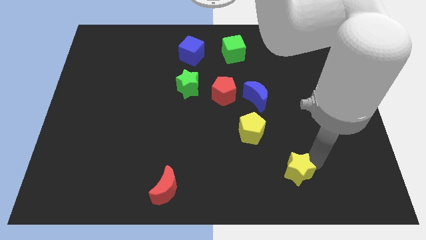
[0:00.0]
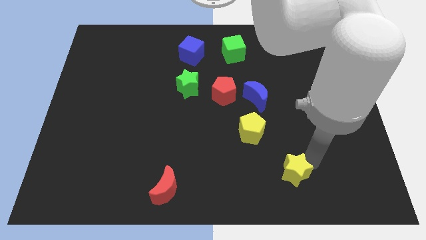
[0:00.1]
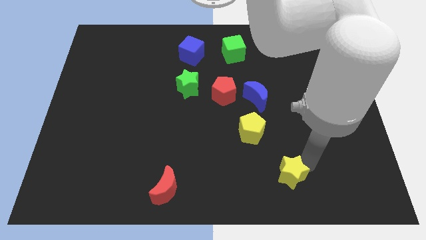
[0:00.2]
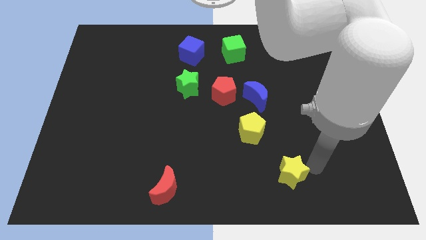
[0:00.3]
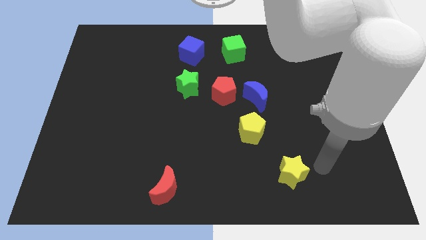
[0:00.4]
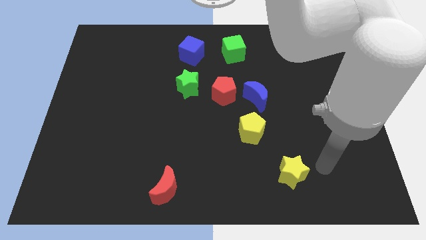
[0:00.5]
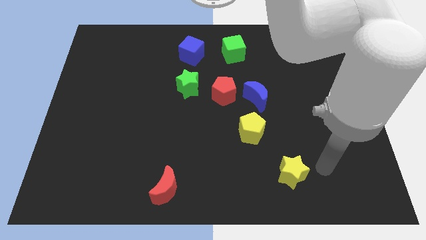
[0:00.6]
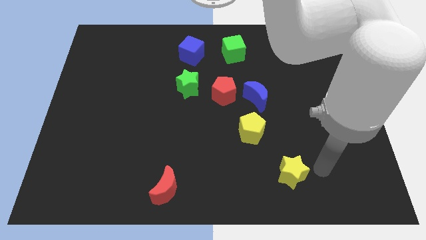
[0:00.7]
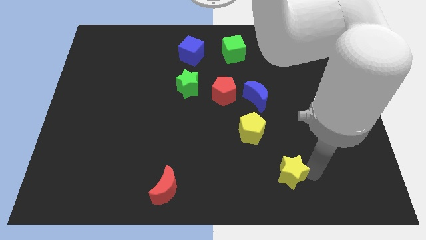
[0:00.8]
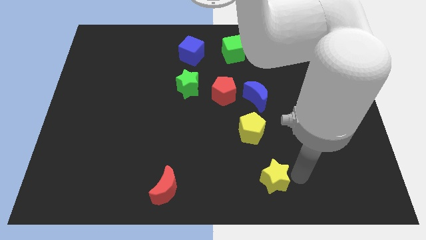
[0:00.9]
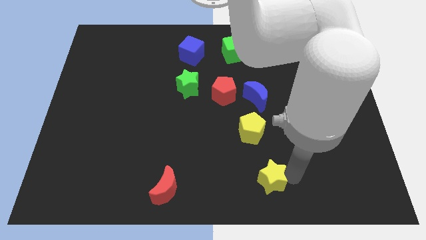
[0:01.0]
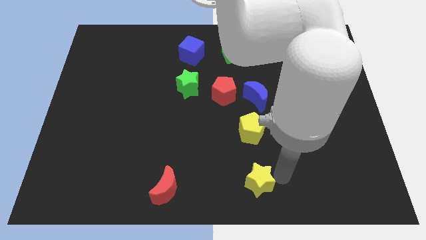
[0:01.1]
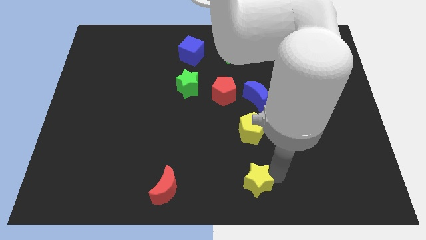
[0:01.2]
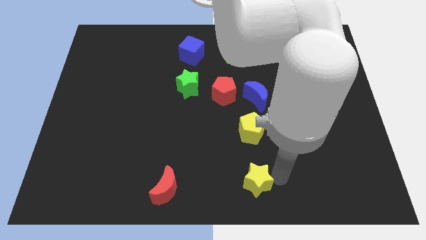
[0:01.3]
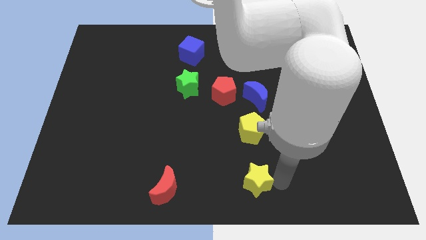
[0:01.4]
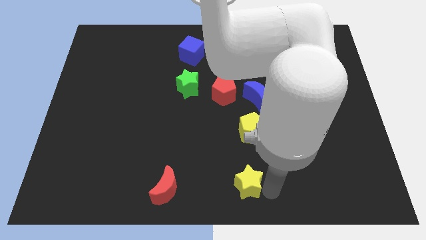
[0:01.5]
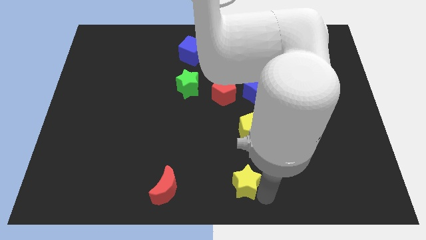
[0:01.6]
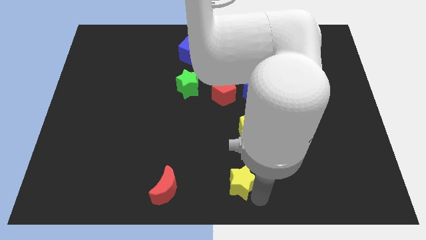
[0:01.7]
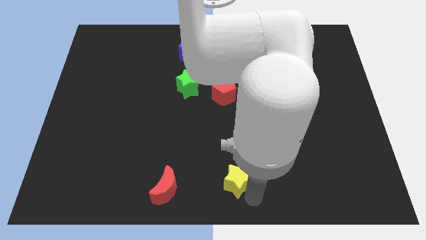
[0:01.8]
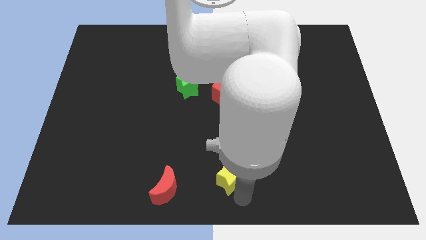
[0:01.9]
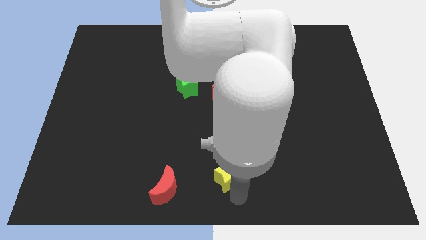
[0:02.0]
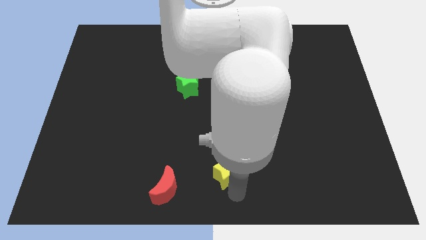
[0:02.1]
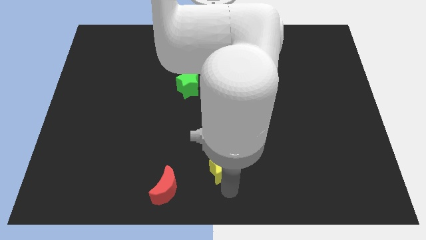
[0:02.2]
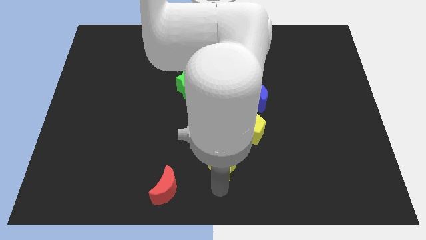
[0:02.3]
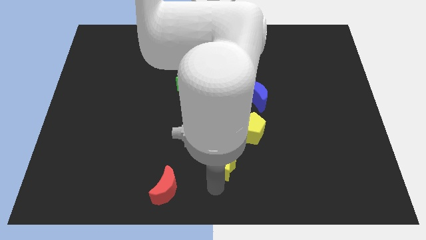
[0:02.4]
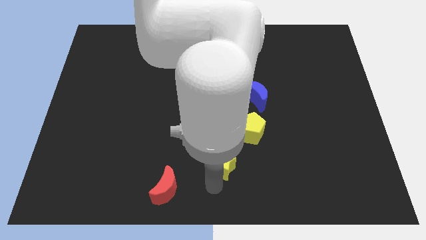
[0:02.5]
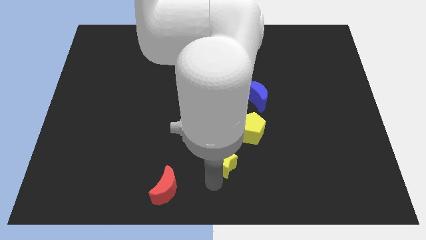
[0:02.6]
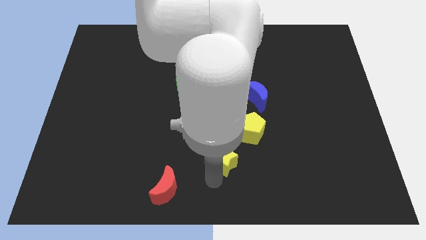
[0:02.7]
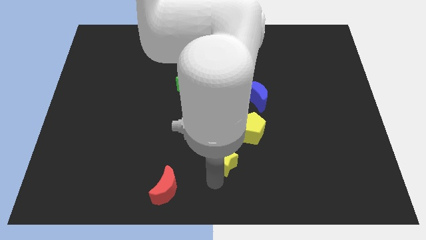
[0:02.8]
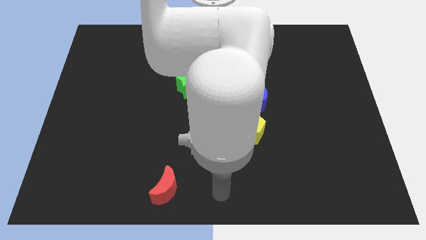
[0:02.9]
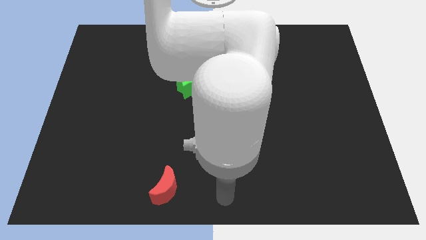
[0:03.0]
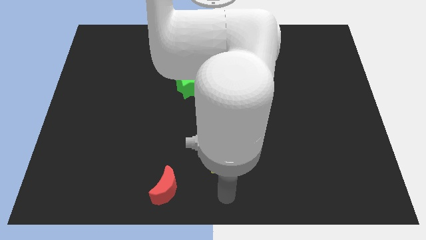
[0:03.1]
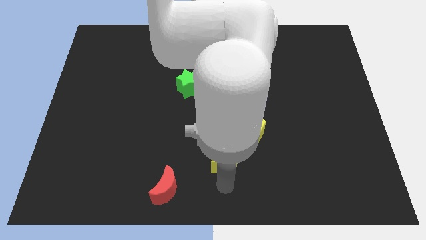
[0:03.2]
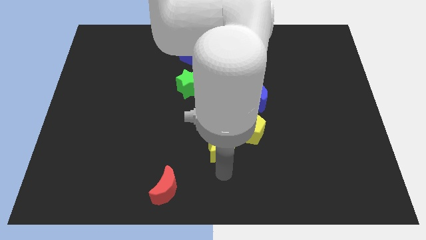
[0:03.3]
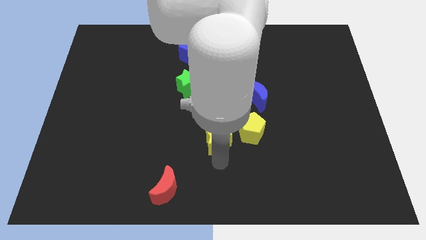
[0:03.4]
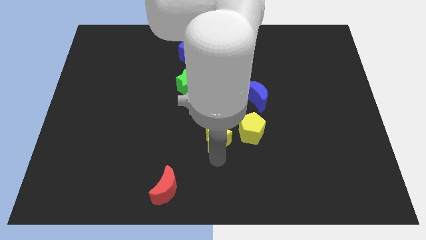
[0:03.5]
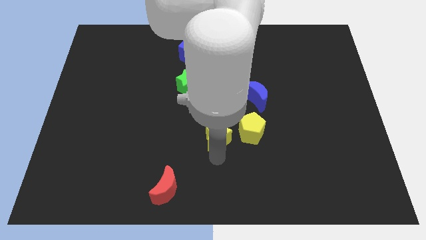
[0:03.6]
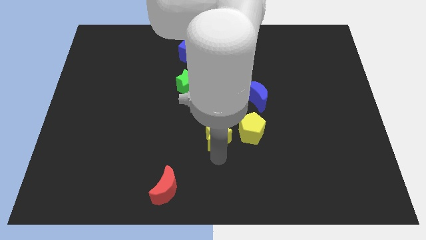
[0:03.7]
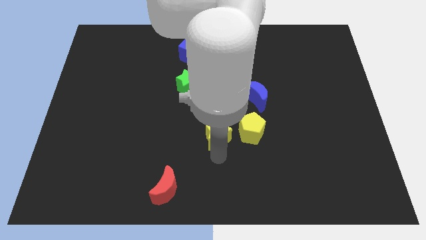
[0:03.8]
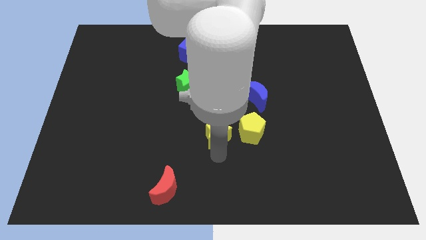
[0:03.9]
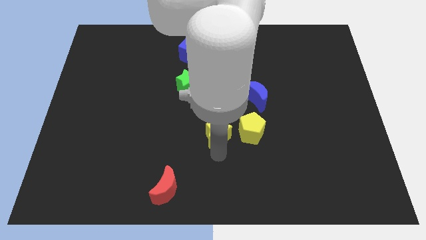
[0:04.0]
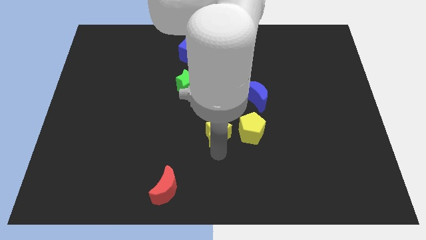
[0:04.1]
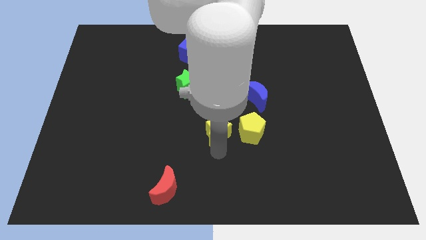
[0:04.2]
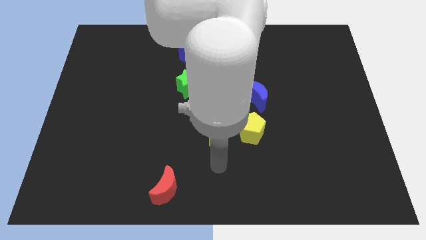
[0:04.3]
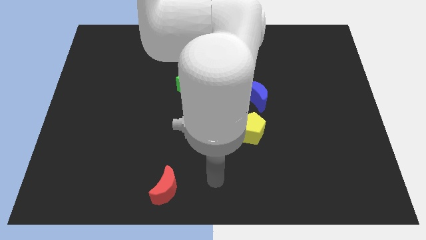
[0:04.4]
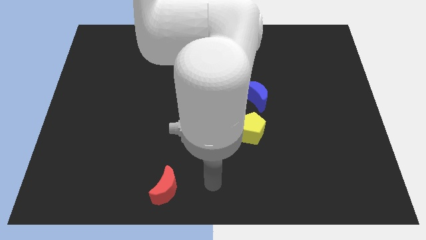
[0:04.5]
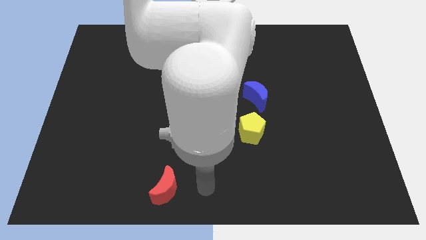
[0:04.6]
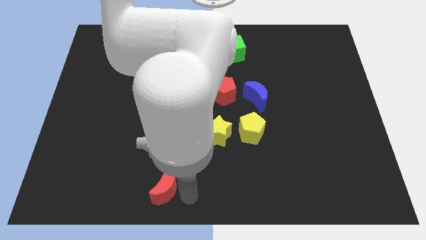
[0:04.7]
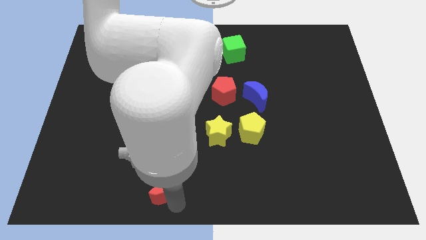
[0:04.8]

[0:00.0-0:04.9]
place the yellow star to the left of the yellow pentagon

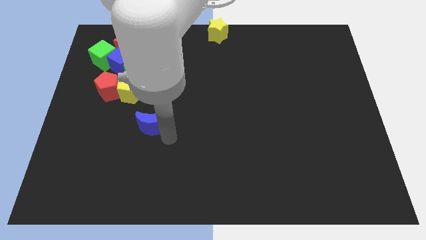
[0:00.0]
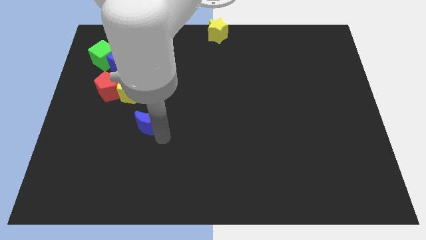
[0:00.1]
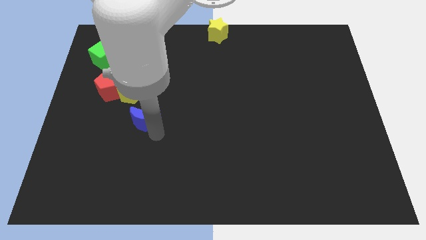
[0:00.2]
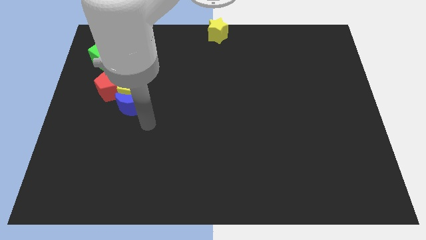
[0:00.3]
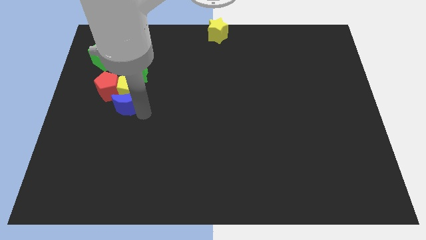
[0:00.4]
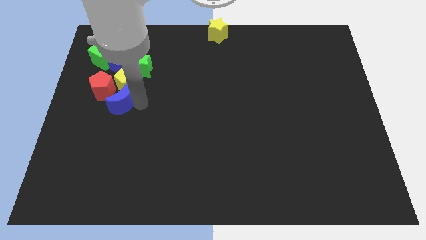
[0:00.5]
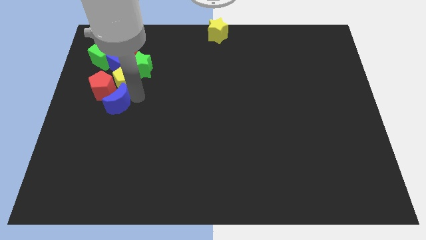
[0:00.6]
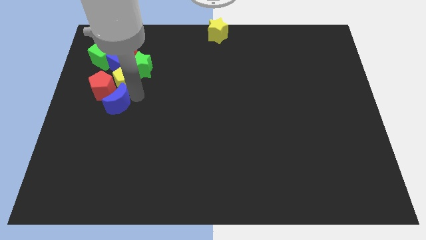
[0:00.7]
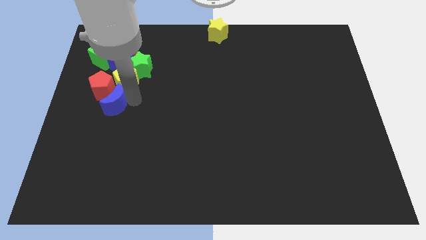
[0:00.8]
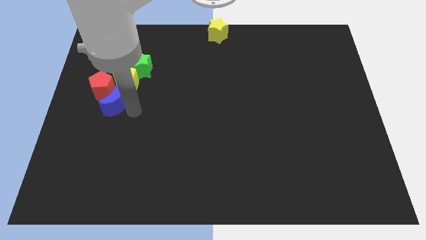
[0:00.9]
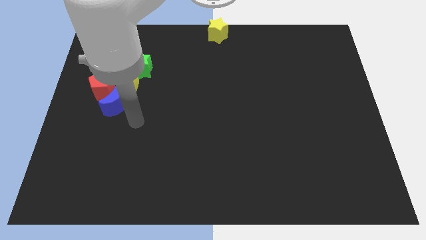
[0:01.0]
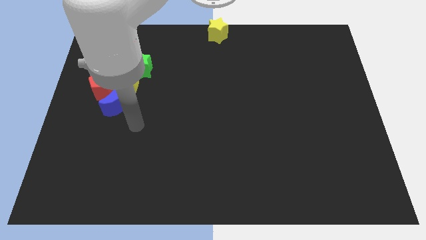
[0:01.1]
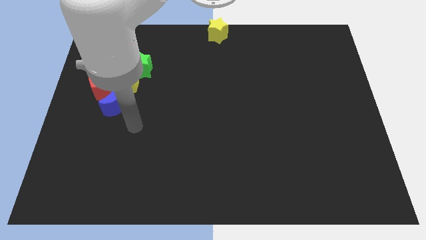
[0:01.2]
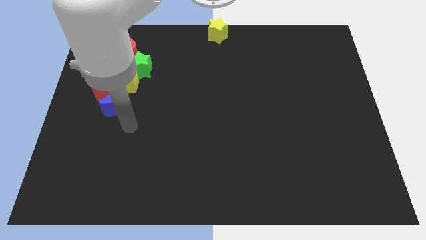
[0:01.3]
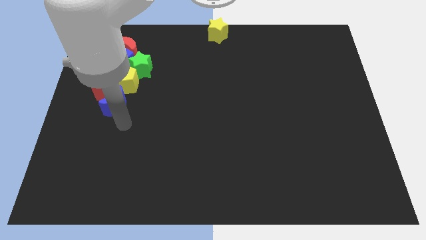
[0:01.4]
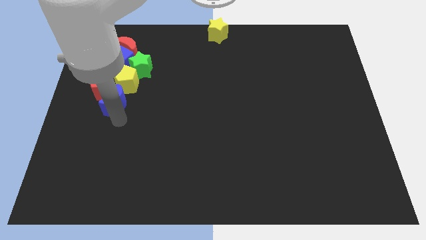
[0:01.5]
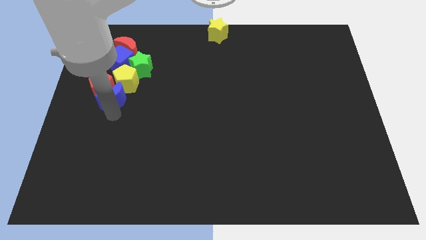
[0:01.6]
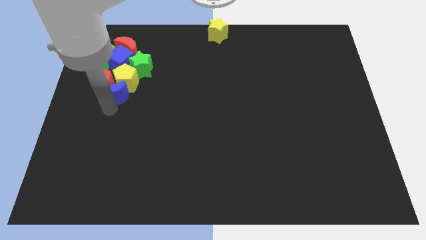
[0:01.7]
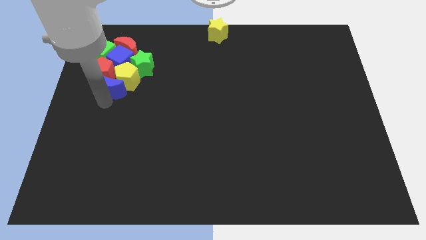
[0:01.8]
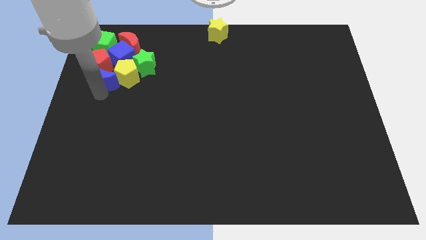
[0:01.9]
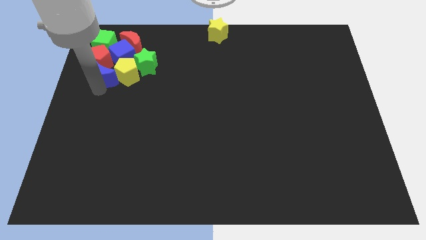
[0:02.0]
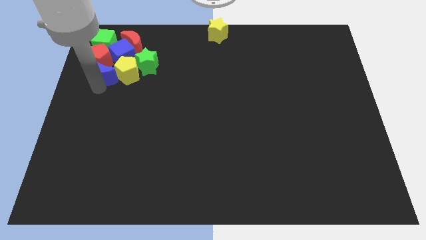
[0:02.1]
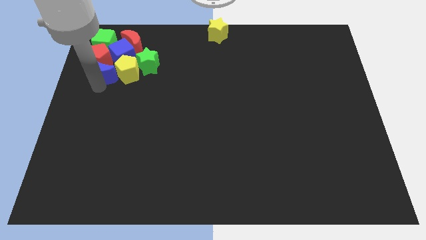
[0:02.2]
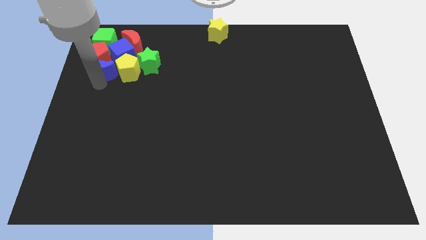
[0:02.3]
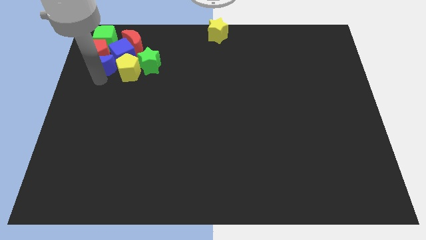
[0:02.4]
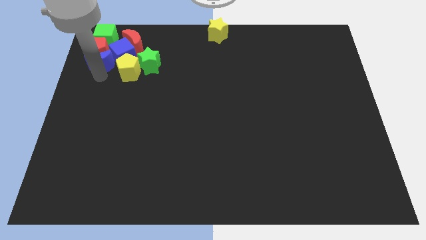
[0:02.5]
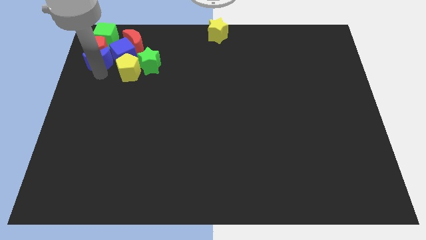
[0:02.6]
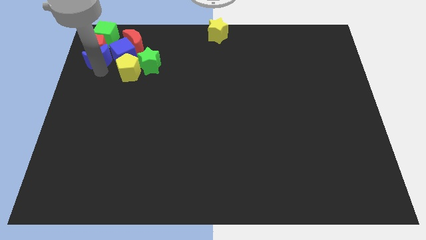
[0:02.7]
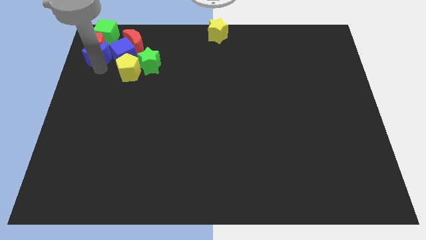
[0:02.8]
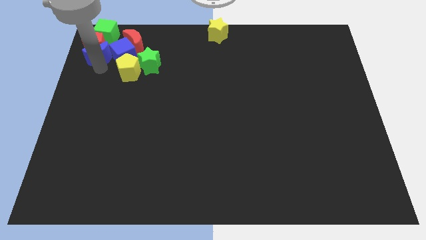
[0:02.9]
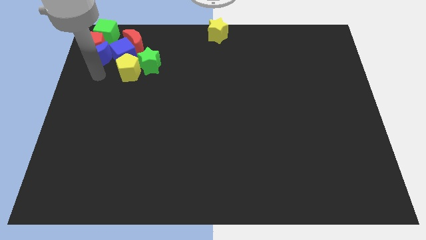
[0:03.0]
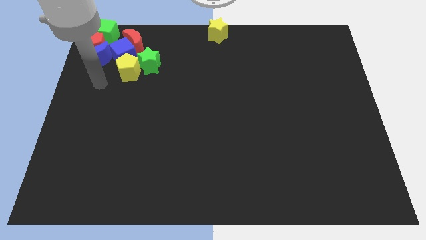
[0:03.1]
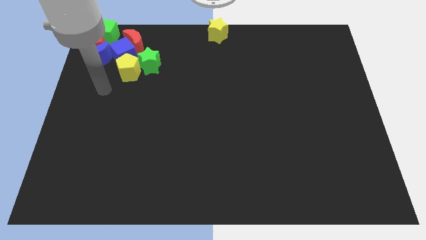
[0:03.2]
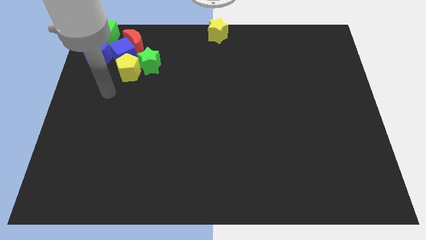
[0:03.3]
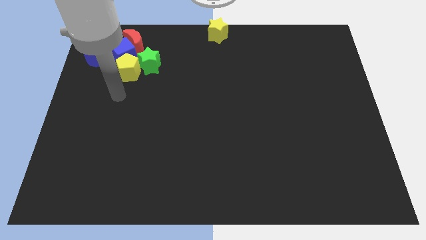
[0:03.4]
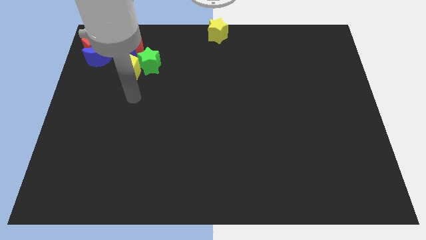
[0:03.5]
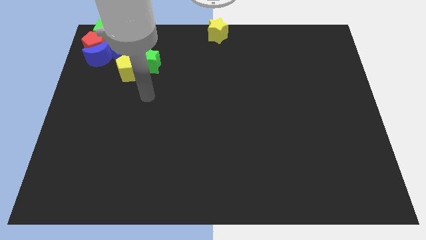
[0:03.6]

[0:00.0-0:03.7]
move the blue moon below the red pentagon

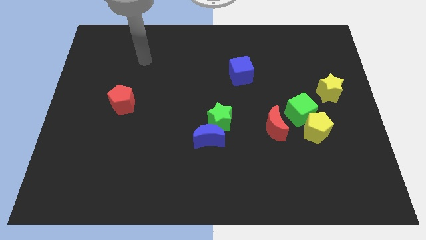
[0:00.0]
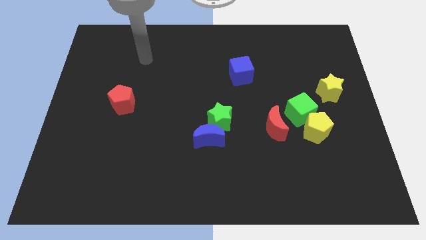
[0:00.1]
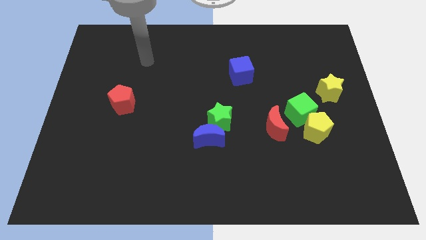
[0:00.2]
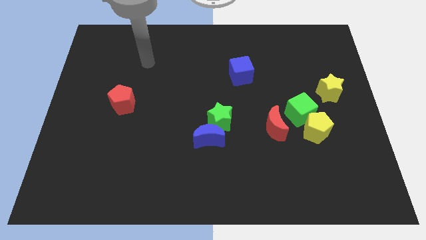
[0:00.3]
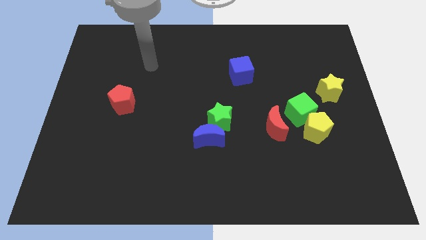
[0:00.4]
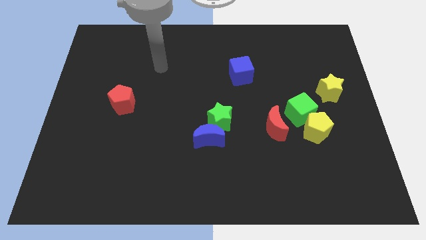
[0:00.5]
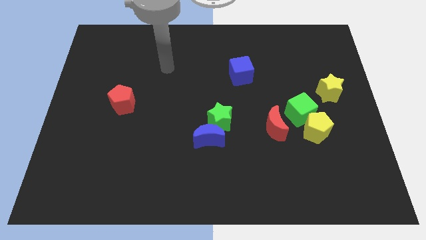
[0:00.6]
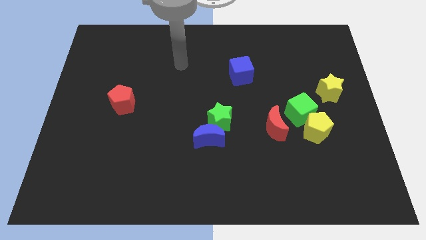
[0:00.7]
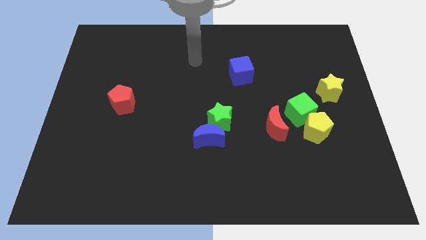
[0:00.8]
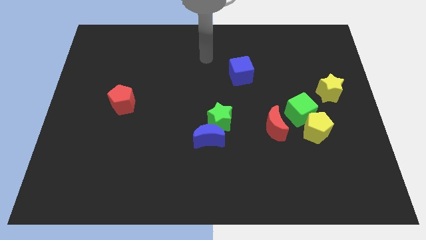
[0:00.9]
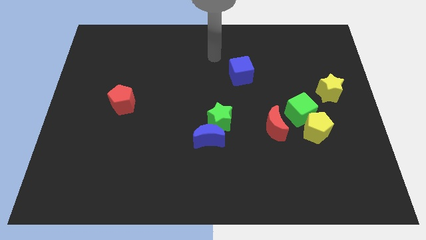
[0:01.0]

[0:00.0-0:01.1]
slide your hand near to the blue cube
